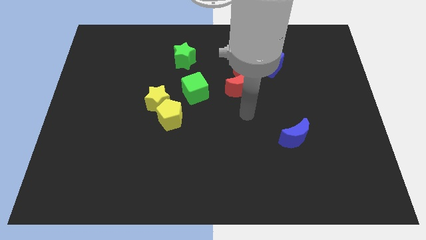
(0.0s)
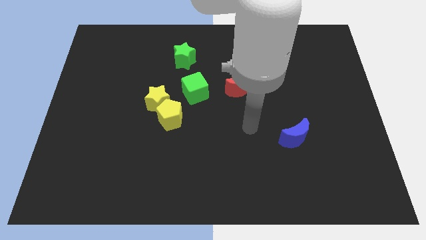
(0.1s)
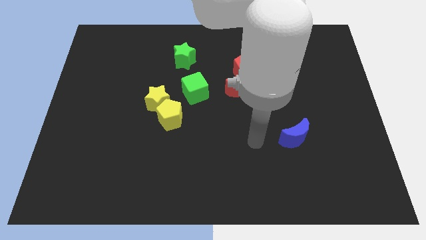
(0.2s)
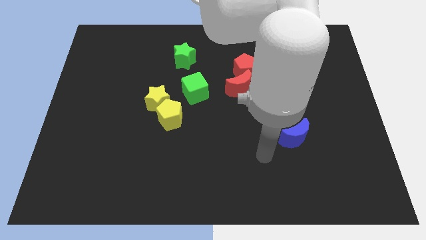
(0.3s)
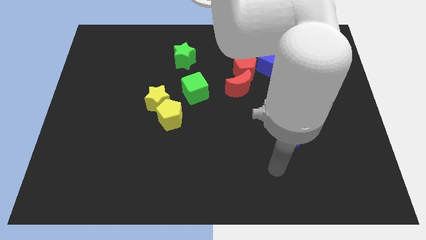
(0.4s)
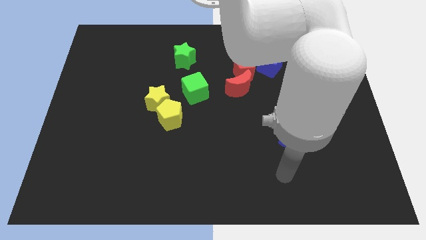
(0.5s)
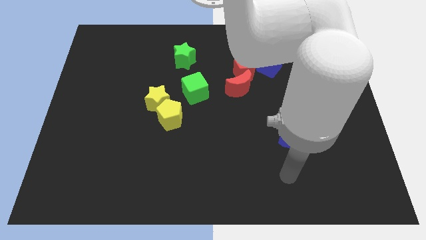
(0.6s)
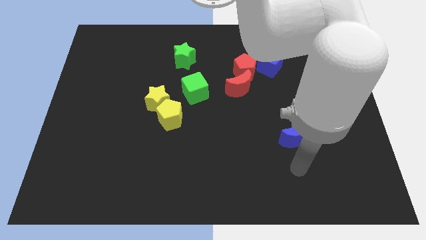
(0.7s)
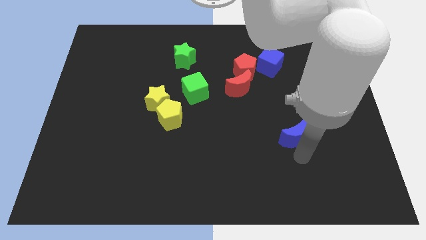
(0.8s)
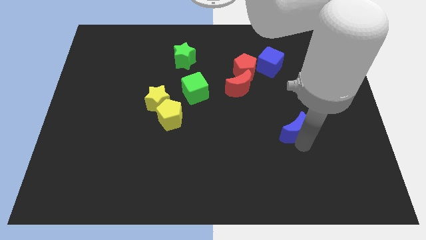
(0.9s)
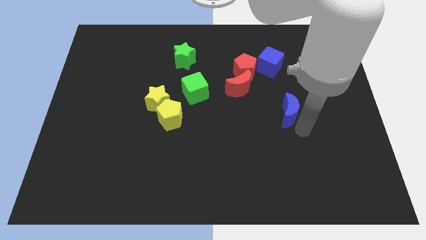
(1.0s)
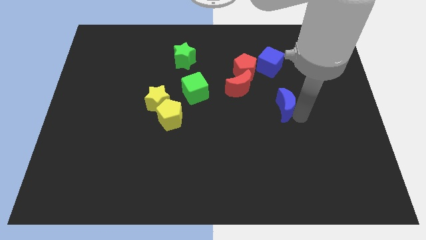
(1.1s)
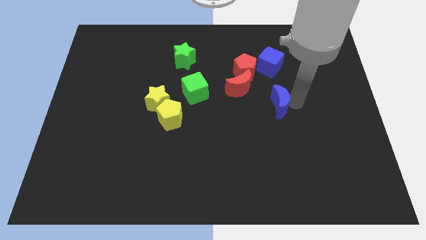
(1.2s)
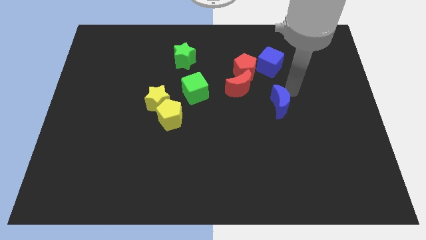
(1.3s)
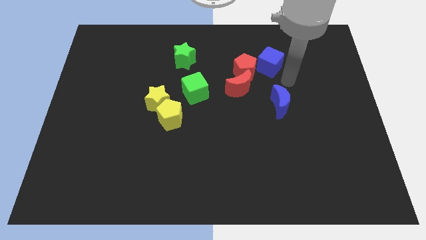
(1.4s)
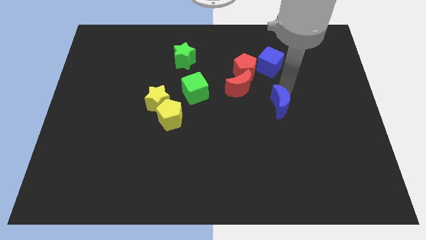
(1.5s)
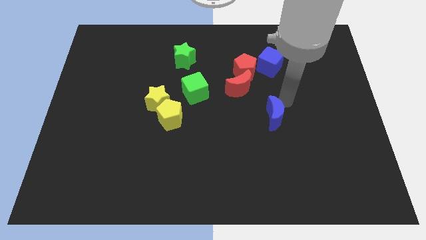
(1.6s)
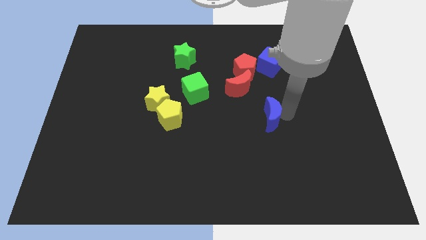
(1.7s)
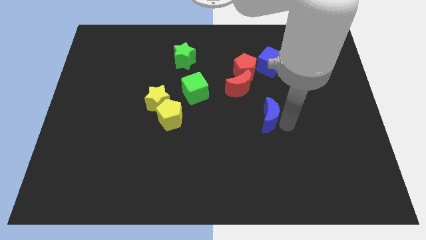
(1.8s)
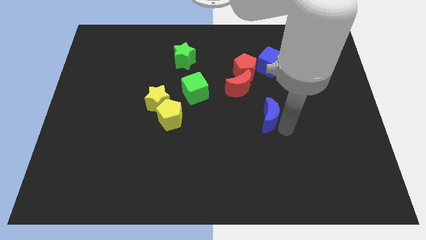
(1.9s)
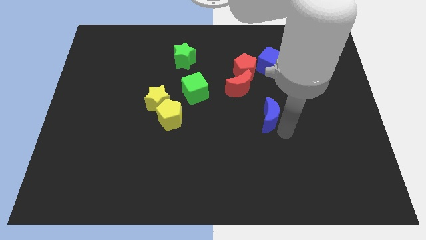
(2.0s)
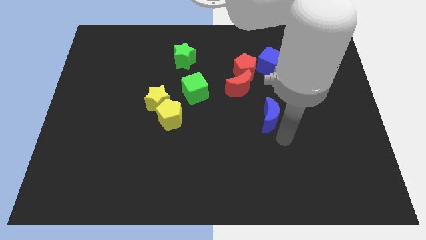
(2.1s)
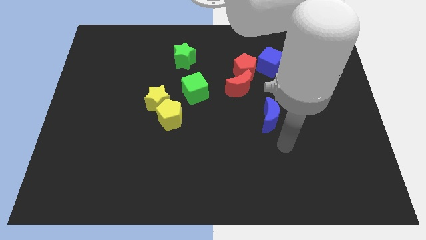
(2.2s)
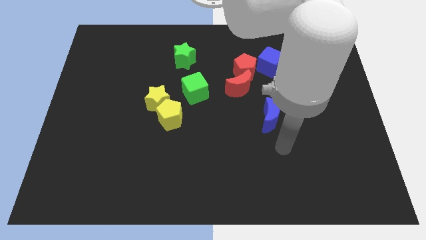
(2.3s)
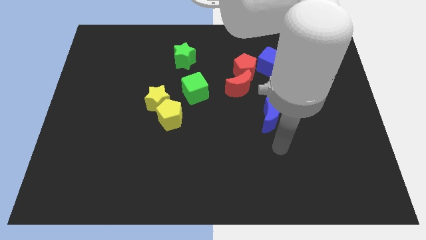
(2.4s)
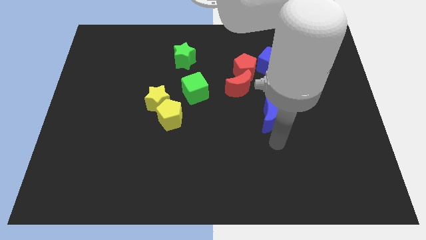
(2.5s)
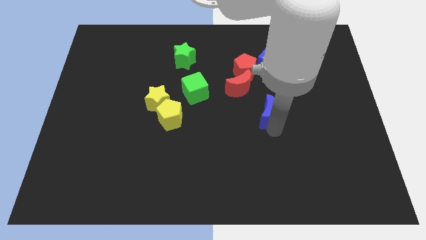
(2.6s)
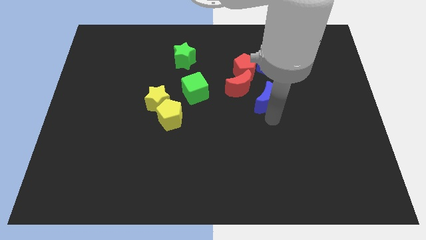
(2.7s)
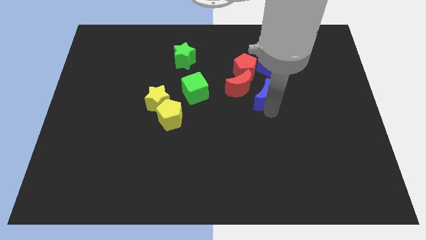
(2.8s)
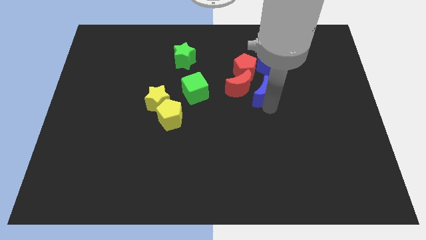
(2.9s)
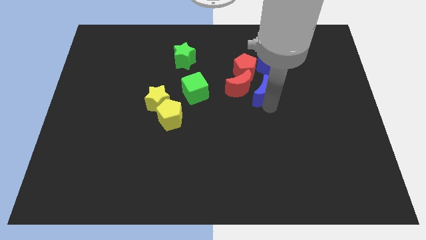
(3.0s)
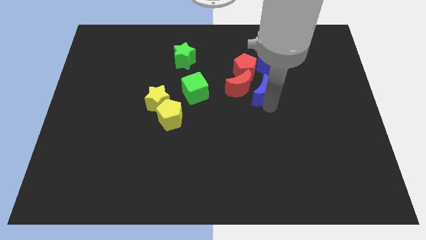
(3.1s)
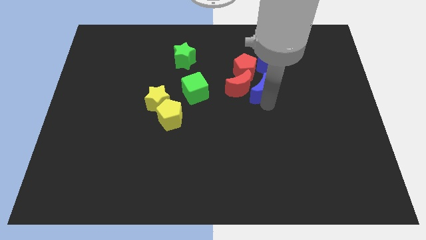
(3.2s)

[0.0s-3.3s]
push the blue crescent to the right of the red crescent

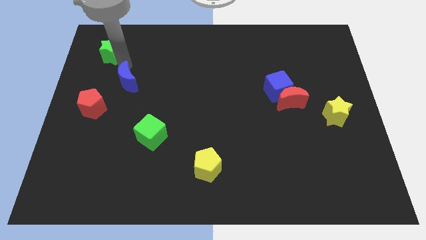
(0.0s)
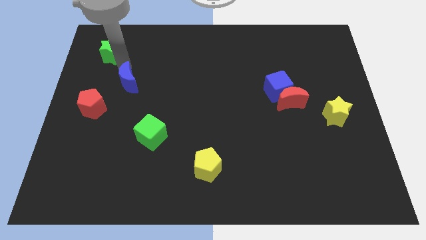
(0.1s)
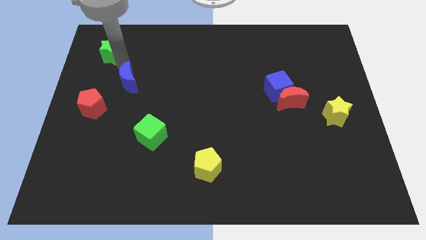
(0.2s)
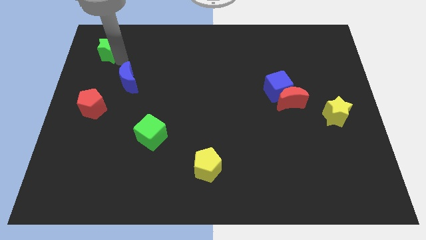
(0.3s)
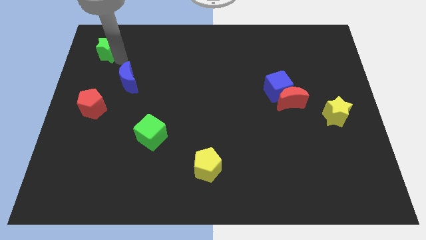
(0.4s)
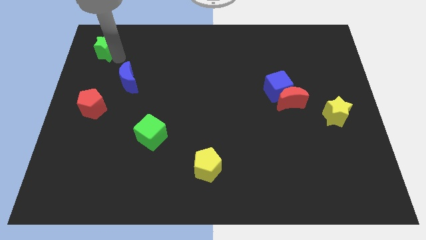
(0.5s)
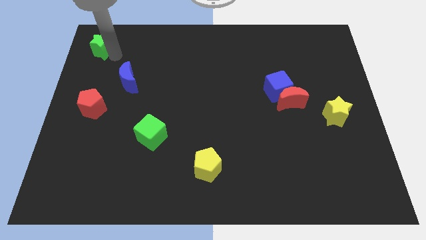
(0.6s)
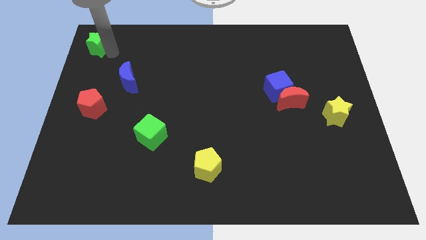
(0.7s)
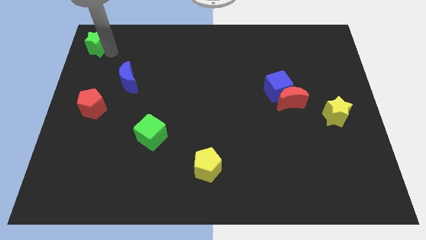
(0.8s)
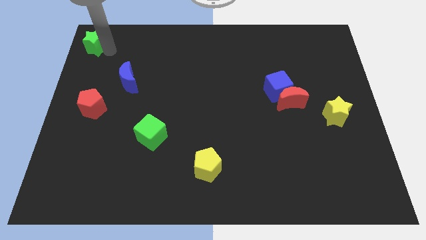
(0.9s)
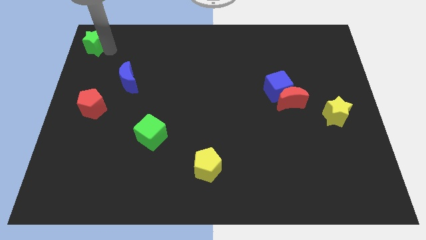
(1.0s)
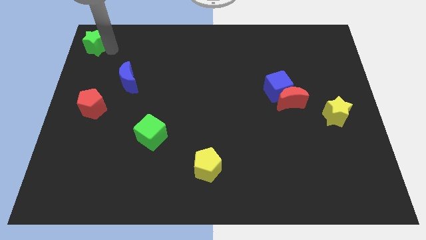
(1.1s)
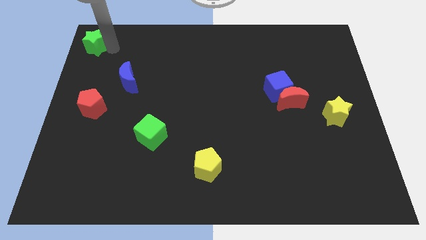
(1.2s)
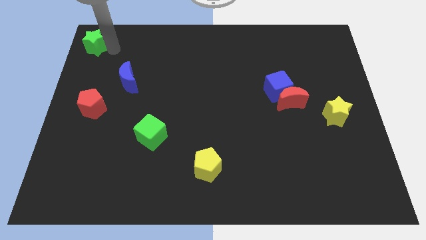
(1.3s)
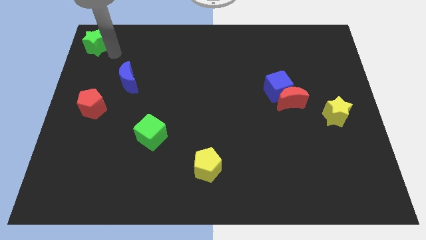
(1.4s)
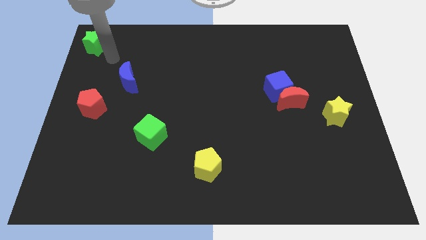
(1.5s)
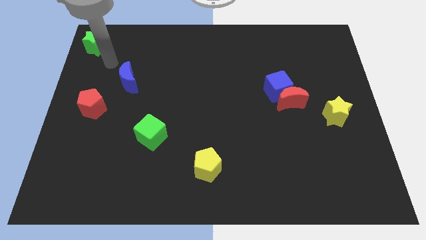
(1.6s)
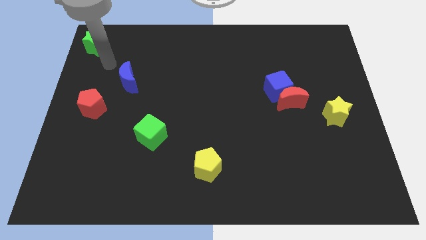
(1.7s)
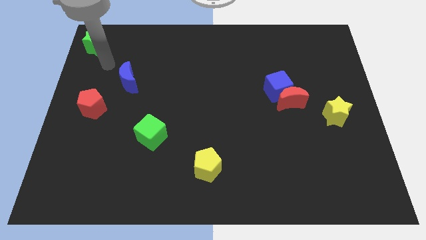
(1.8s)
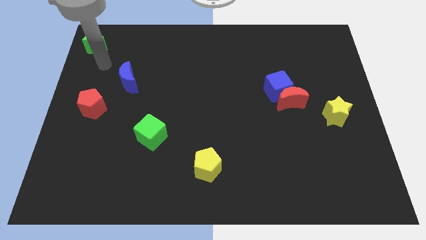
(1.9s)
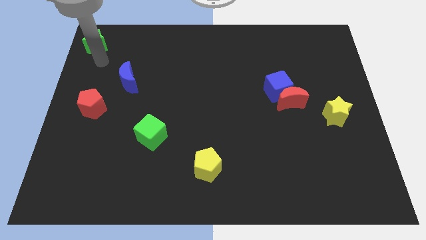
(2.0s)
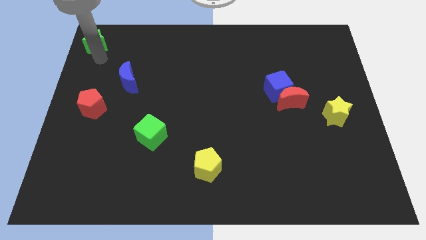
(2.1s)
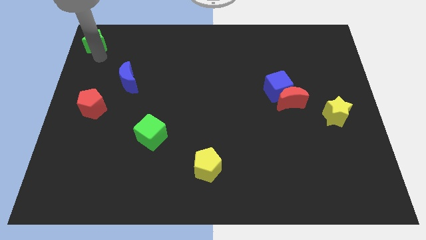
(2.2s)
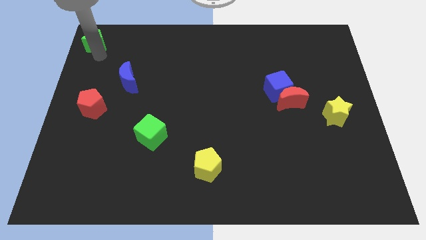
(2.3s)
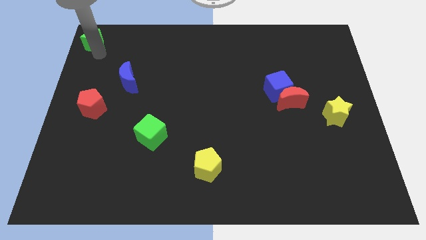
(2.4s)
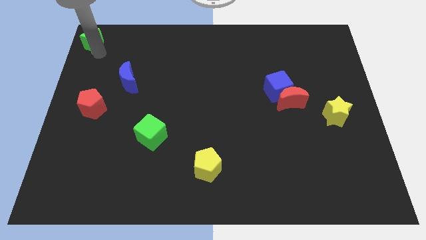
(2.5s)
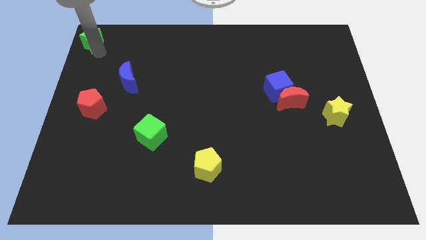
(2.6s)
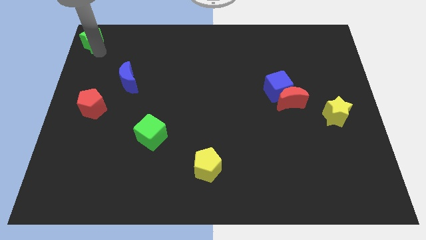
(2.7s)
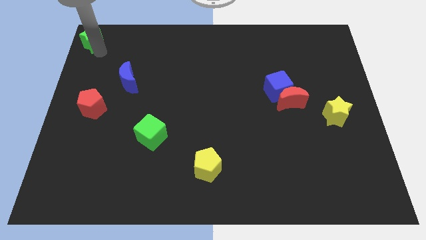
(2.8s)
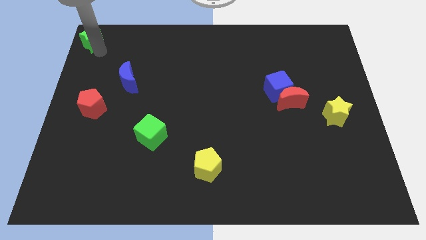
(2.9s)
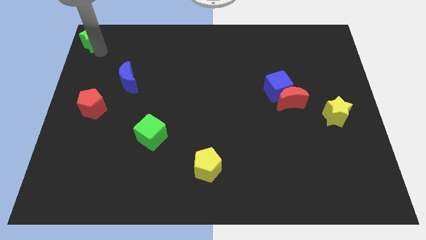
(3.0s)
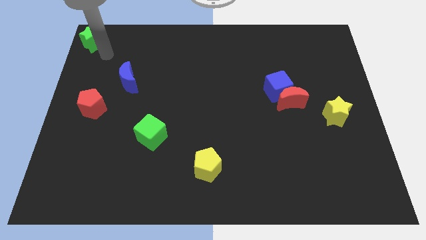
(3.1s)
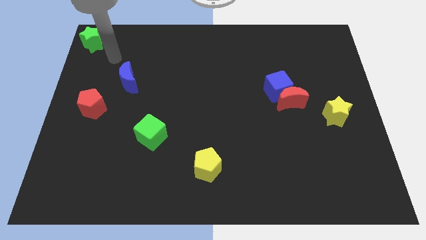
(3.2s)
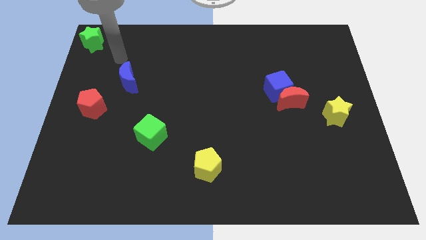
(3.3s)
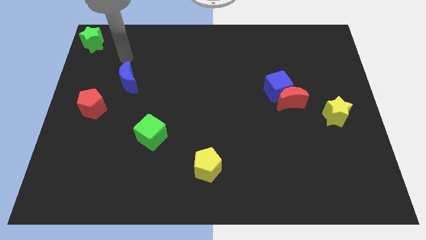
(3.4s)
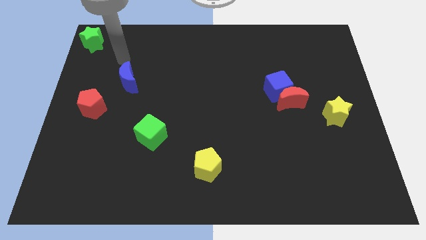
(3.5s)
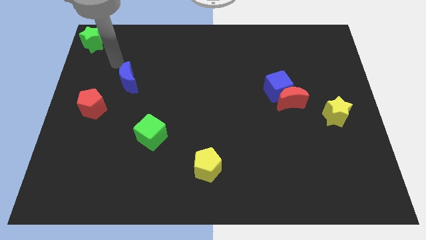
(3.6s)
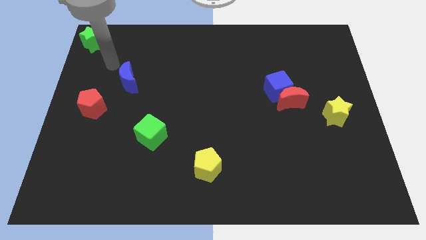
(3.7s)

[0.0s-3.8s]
move the green star to the top left corner of the board

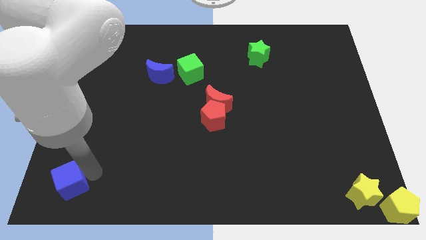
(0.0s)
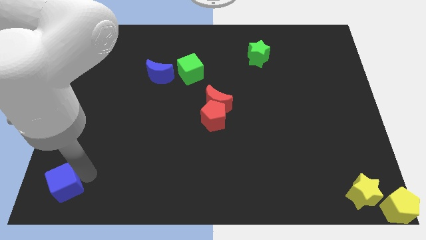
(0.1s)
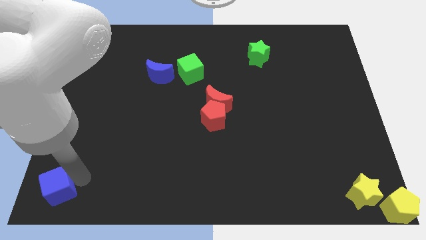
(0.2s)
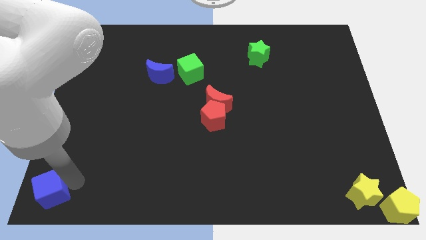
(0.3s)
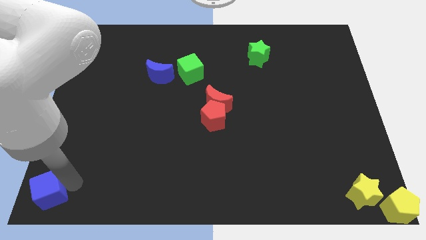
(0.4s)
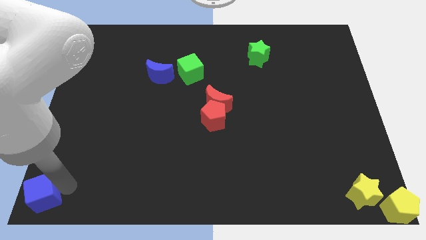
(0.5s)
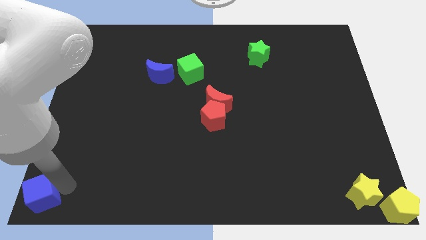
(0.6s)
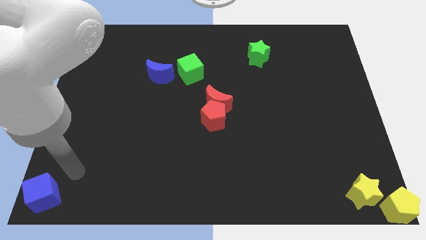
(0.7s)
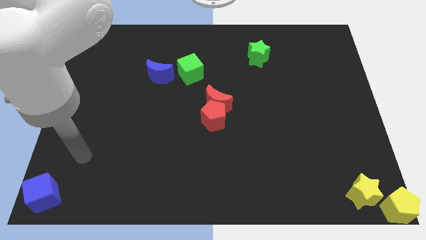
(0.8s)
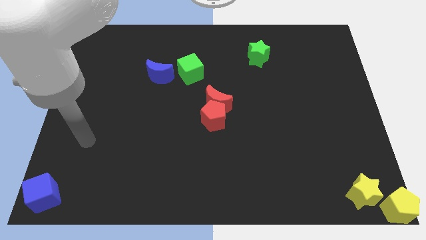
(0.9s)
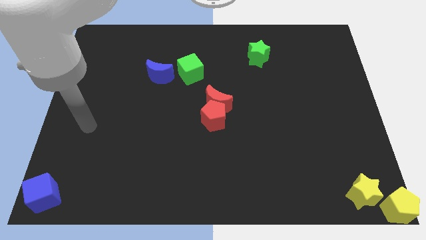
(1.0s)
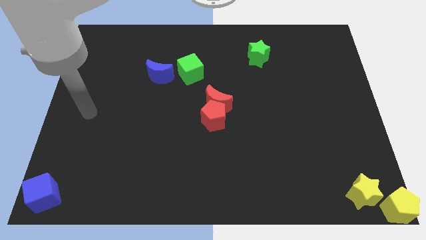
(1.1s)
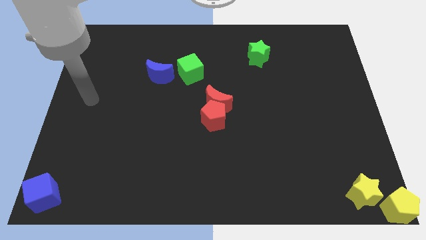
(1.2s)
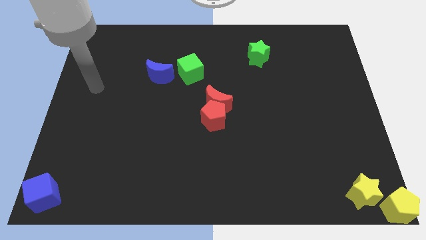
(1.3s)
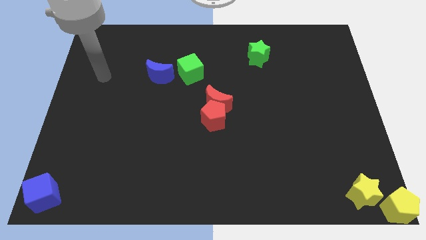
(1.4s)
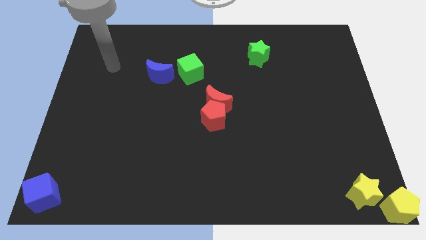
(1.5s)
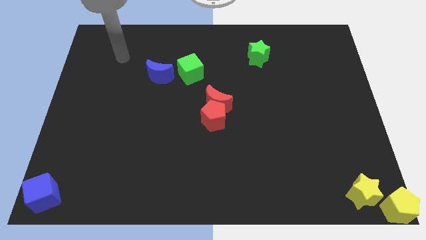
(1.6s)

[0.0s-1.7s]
push the blue cube to the bottom left corner
